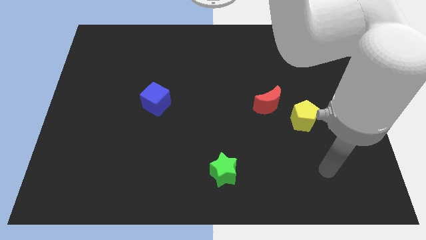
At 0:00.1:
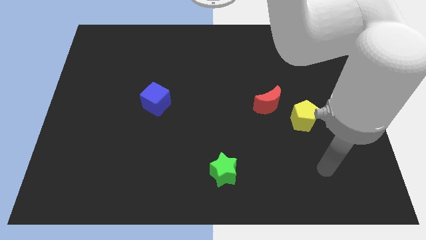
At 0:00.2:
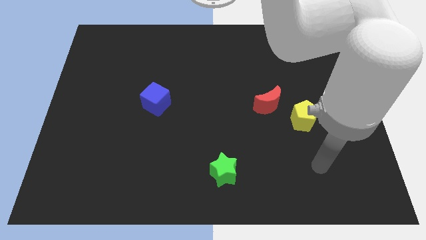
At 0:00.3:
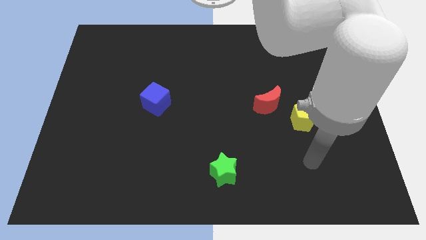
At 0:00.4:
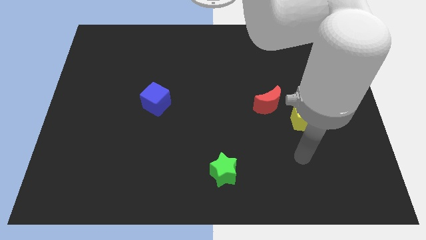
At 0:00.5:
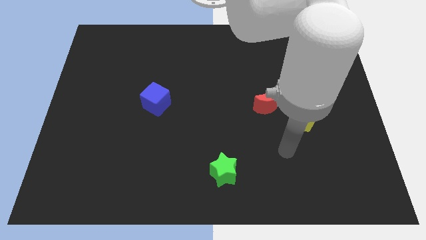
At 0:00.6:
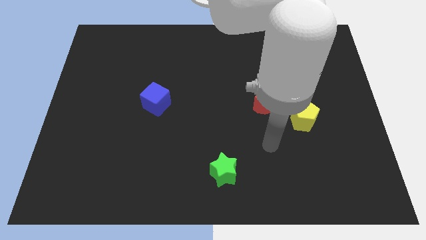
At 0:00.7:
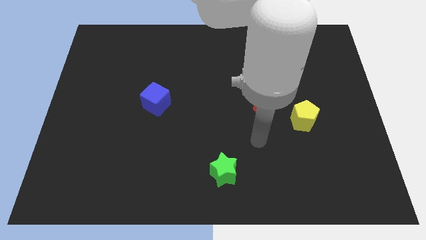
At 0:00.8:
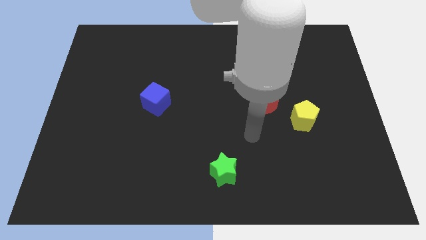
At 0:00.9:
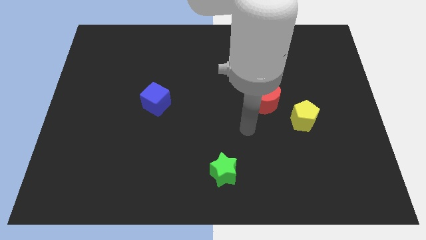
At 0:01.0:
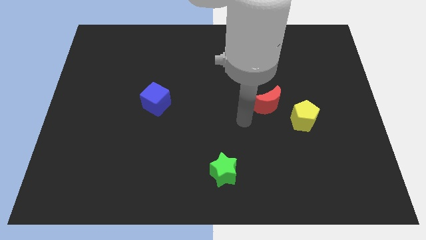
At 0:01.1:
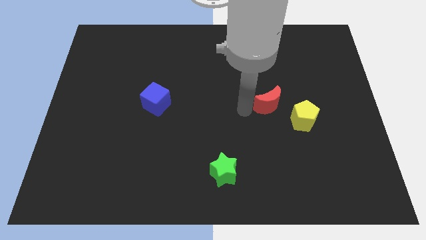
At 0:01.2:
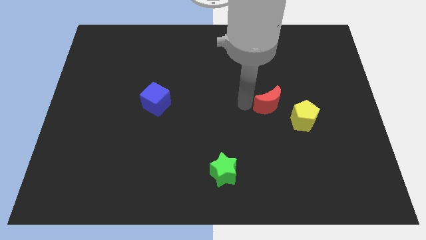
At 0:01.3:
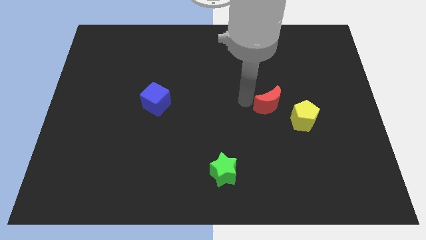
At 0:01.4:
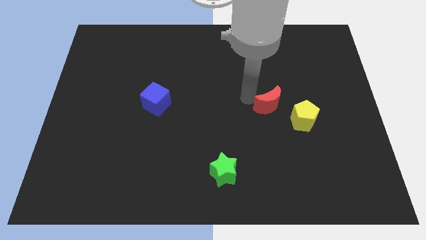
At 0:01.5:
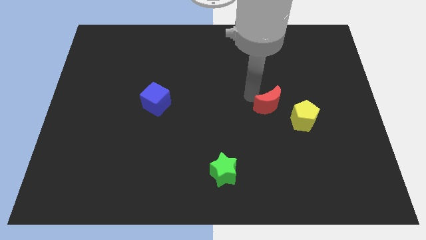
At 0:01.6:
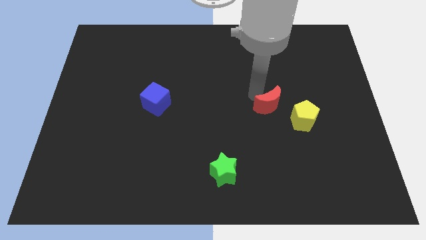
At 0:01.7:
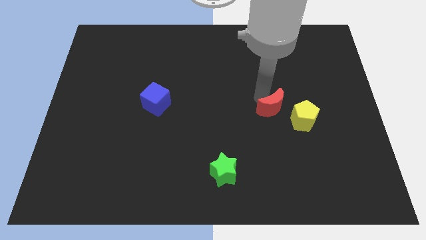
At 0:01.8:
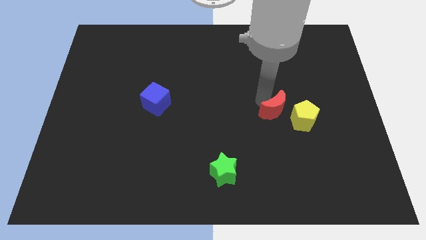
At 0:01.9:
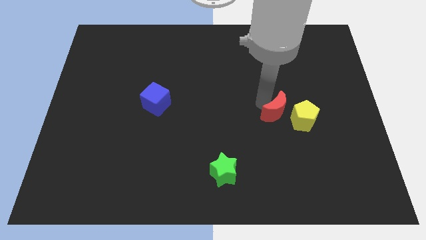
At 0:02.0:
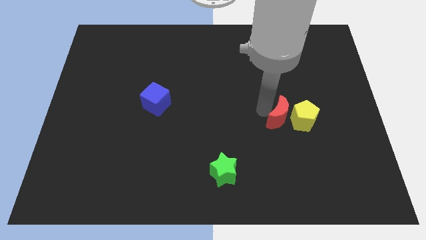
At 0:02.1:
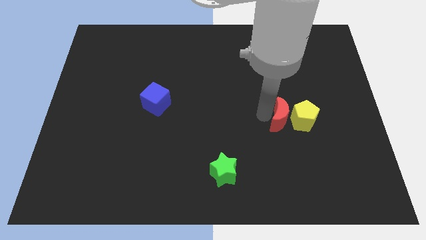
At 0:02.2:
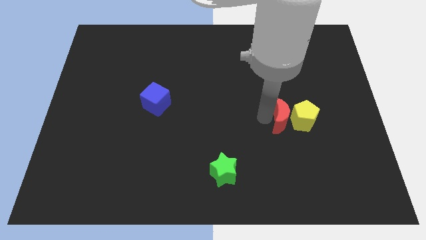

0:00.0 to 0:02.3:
put the red moon next to the yellow block

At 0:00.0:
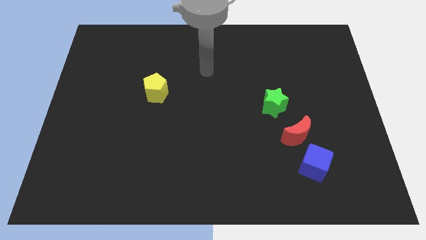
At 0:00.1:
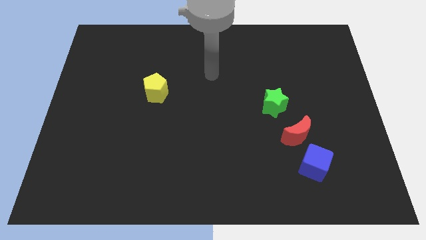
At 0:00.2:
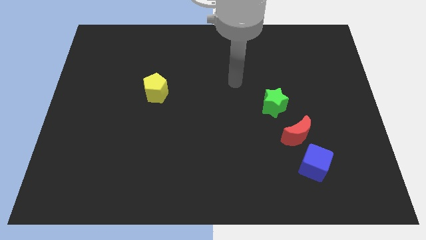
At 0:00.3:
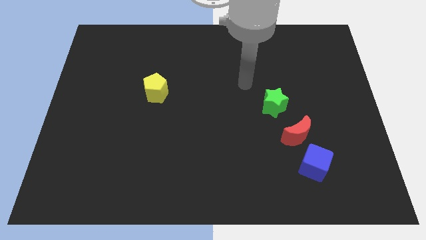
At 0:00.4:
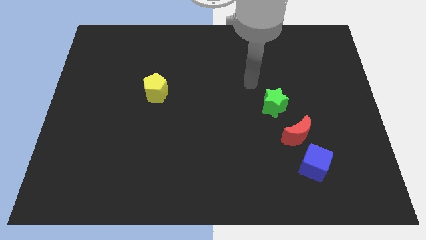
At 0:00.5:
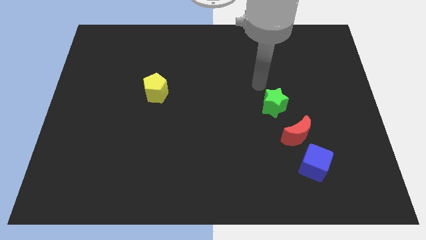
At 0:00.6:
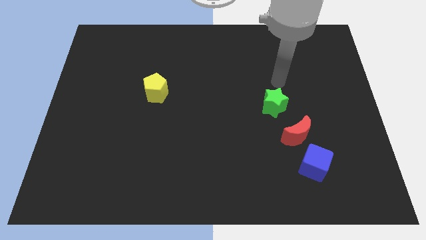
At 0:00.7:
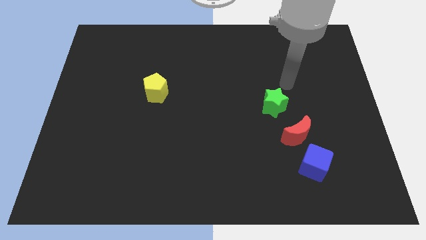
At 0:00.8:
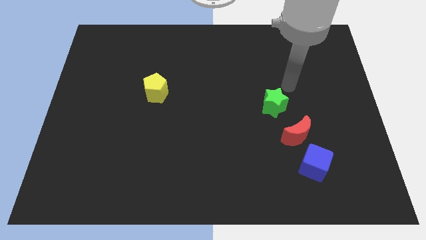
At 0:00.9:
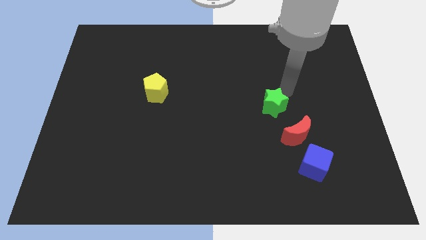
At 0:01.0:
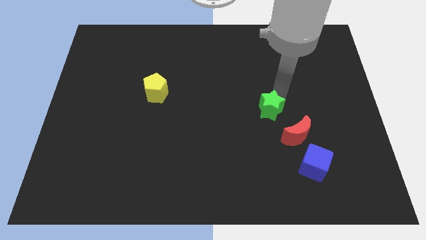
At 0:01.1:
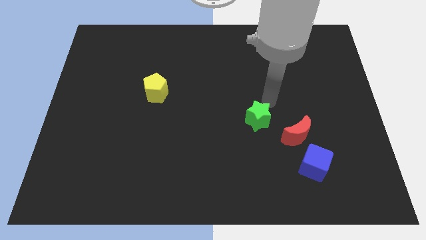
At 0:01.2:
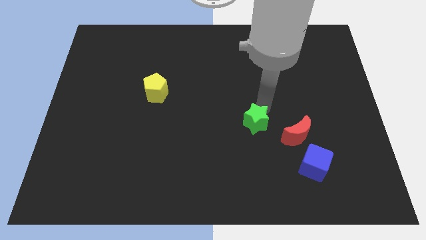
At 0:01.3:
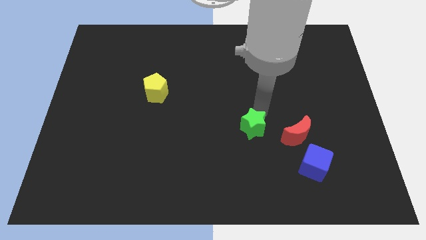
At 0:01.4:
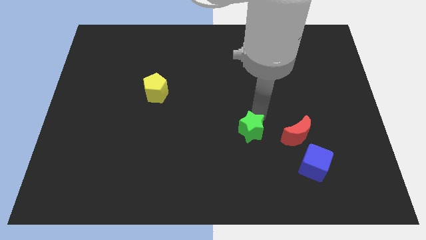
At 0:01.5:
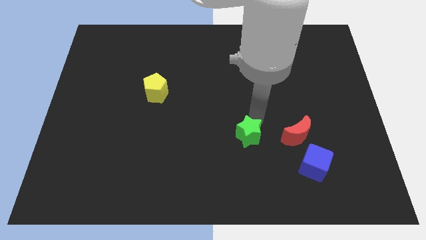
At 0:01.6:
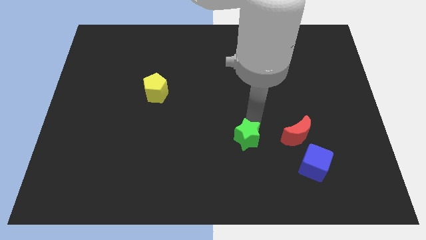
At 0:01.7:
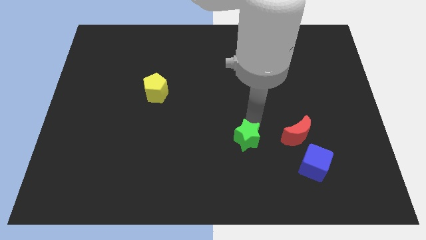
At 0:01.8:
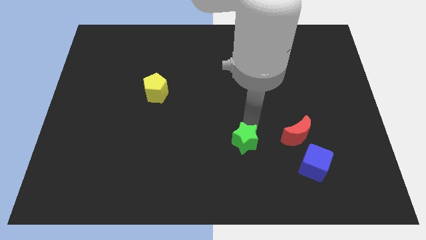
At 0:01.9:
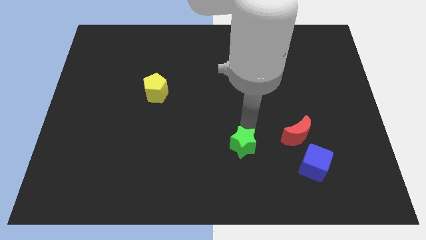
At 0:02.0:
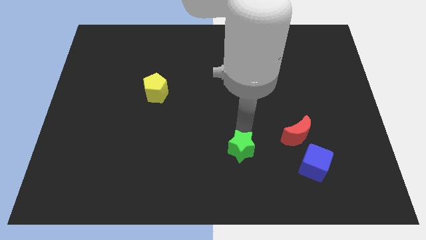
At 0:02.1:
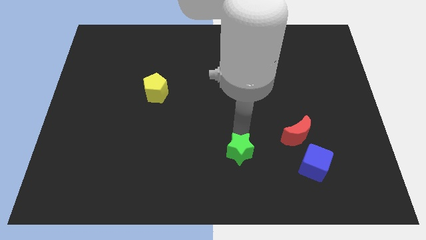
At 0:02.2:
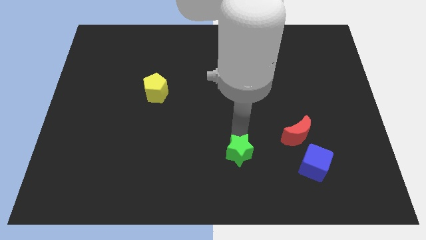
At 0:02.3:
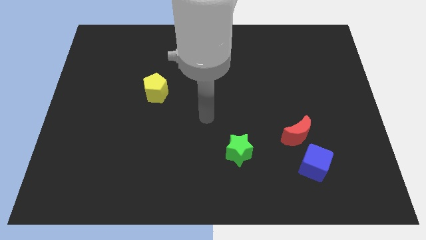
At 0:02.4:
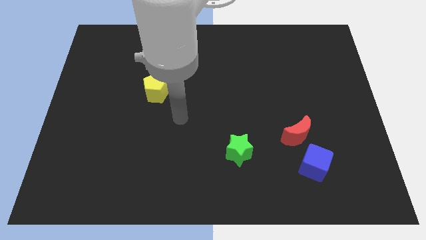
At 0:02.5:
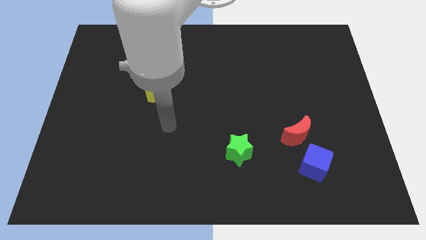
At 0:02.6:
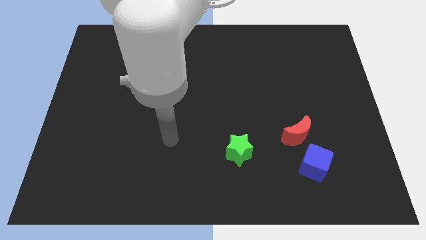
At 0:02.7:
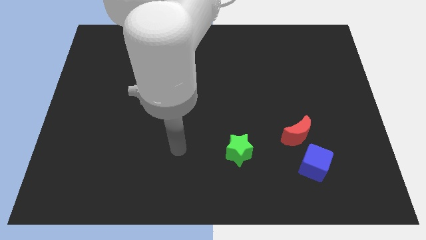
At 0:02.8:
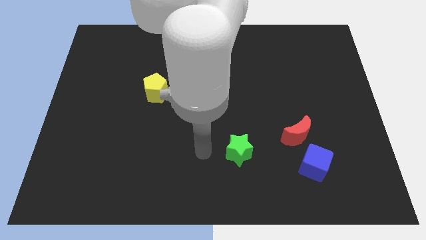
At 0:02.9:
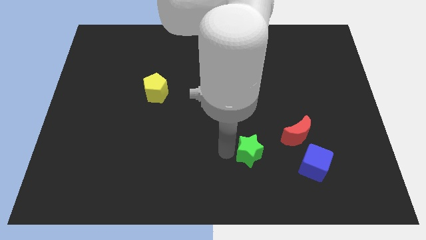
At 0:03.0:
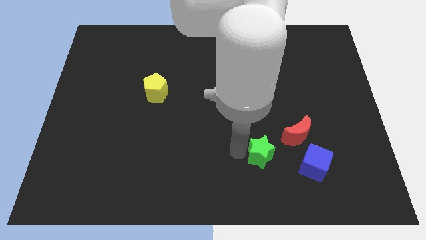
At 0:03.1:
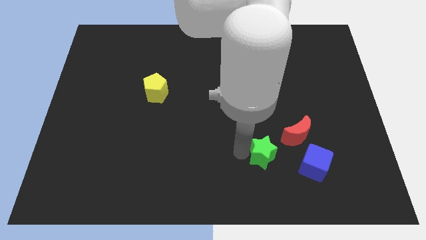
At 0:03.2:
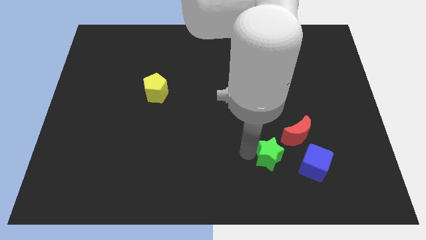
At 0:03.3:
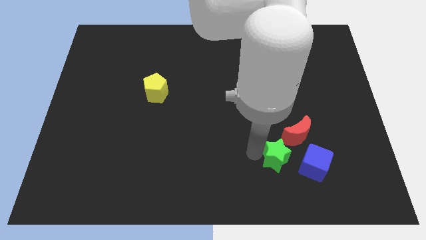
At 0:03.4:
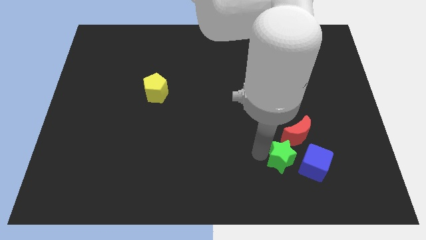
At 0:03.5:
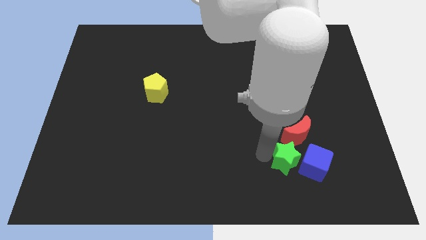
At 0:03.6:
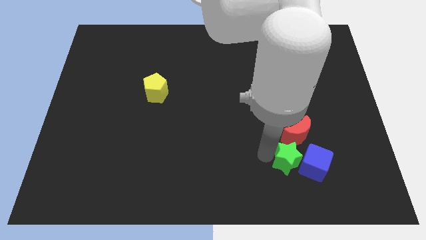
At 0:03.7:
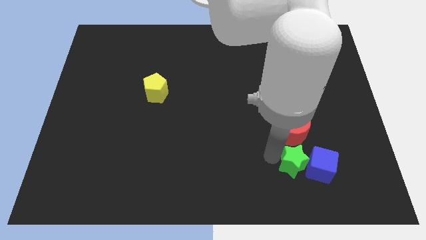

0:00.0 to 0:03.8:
push the green block towards the blue cube

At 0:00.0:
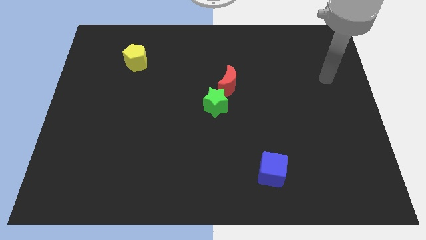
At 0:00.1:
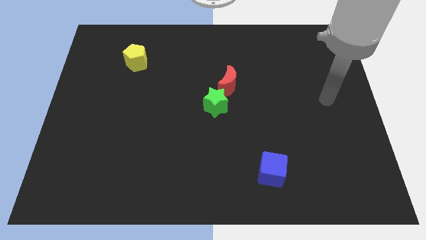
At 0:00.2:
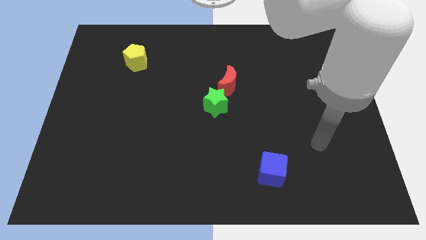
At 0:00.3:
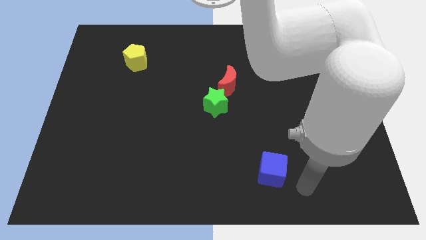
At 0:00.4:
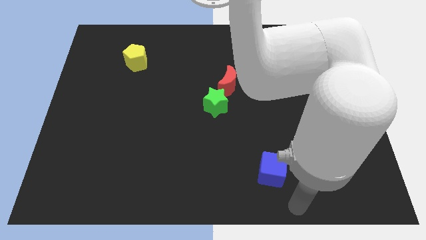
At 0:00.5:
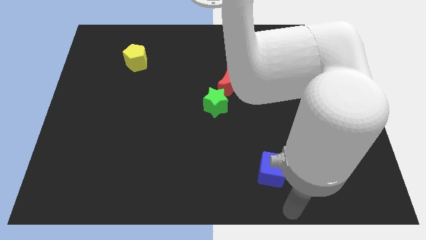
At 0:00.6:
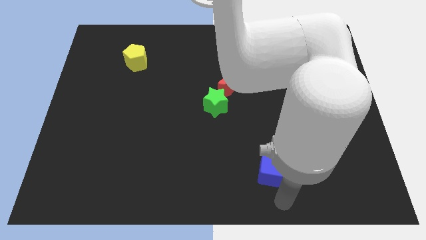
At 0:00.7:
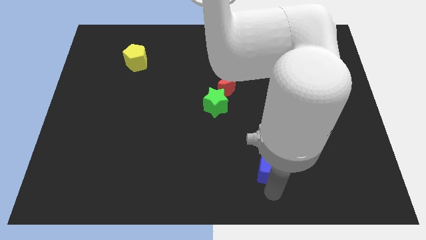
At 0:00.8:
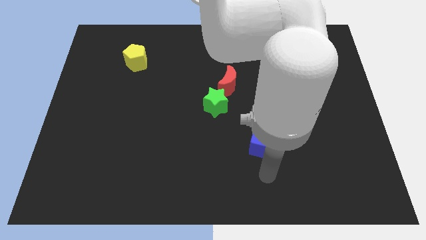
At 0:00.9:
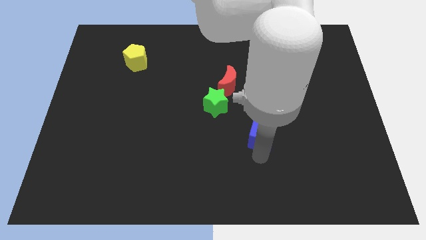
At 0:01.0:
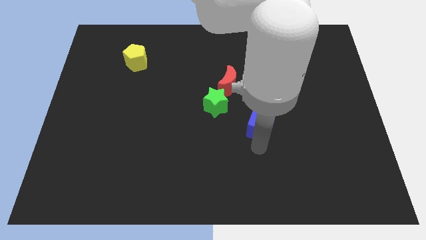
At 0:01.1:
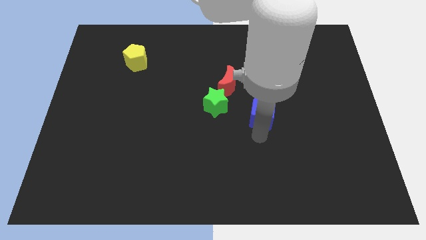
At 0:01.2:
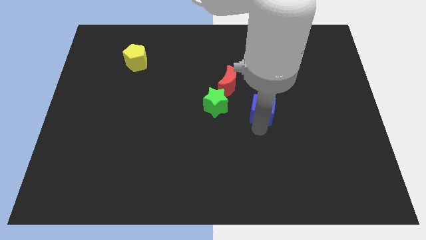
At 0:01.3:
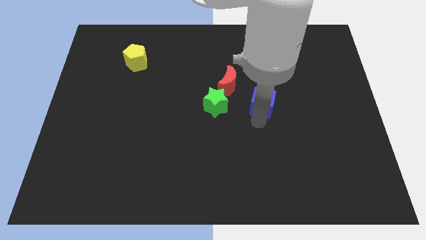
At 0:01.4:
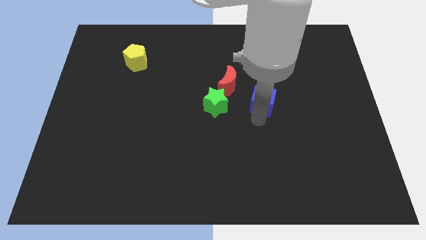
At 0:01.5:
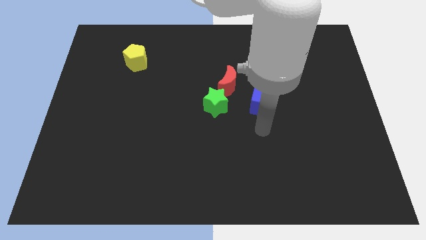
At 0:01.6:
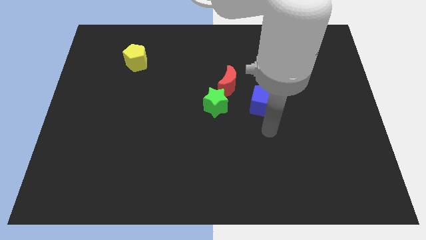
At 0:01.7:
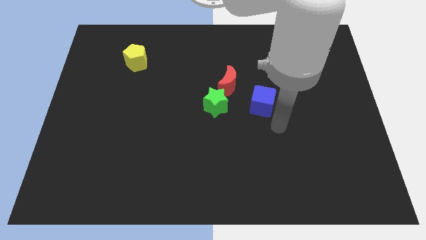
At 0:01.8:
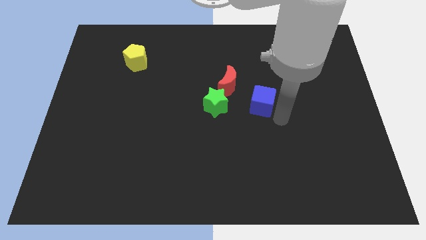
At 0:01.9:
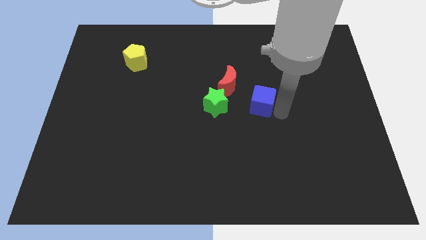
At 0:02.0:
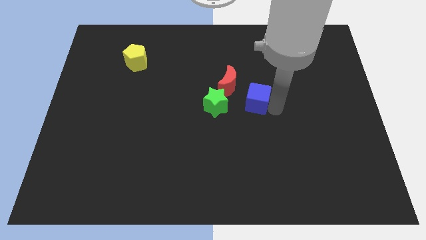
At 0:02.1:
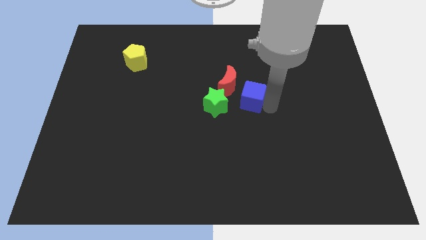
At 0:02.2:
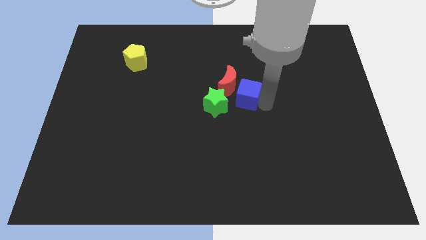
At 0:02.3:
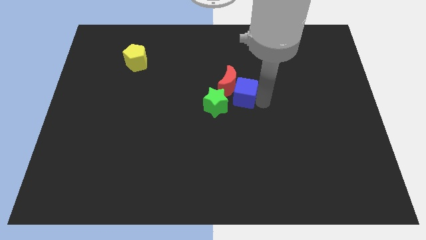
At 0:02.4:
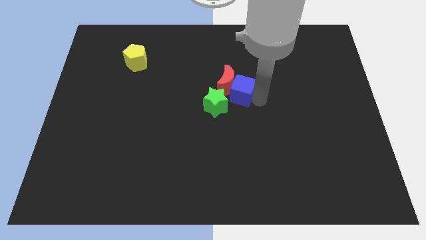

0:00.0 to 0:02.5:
slide the blue block towards the red block
